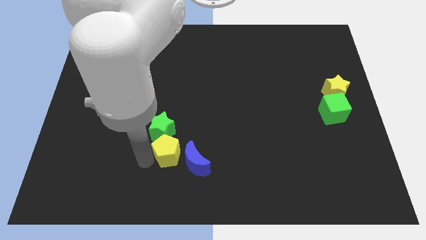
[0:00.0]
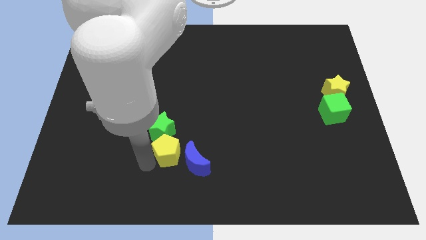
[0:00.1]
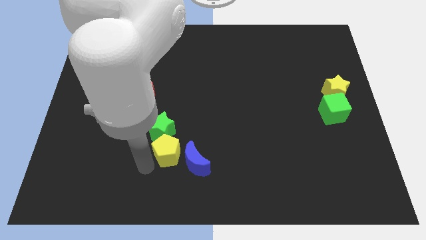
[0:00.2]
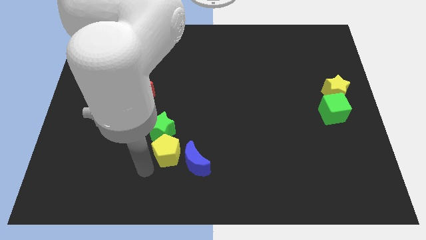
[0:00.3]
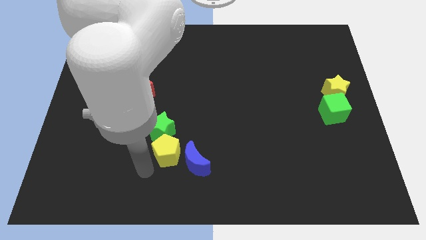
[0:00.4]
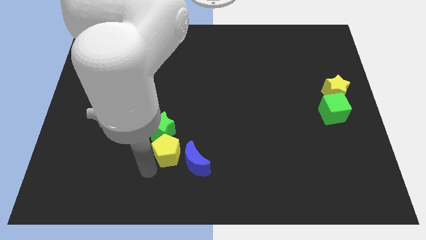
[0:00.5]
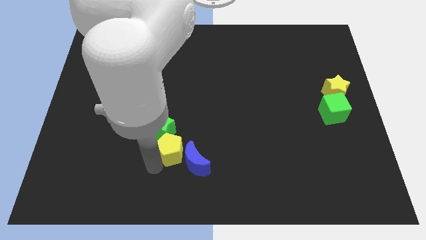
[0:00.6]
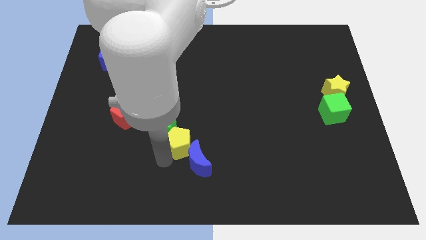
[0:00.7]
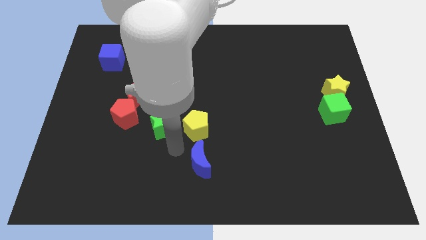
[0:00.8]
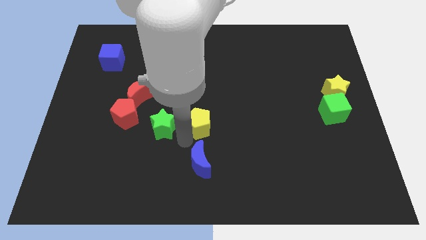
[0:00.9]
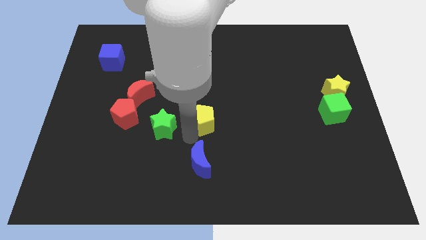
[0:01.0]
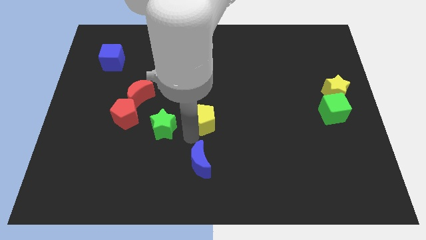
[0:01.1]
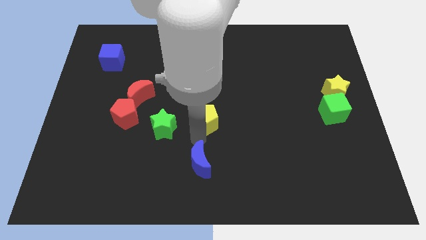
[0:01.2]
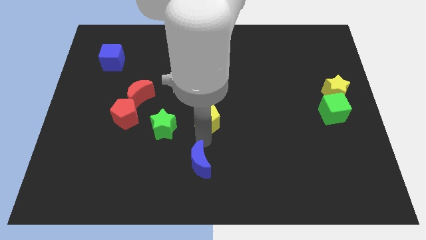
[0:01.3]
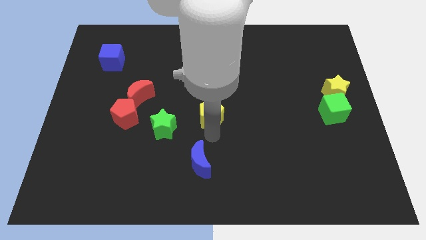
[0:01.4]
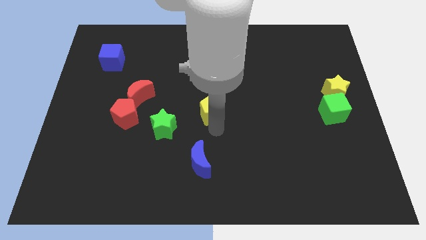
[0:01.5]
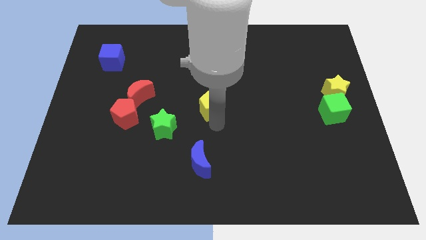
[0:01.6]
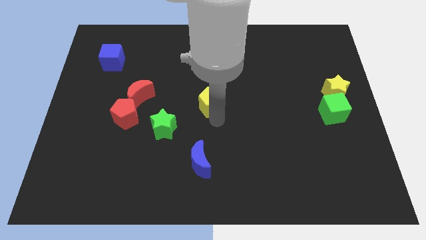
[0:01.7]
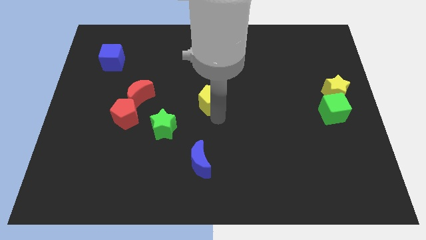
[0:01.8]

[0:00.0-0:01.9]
separate the yellow pentagon from green star

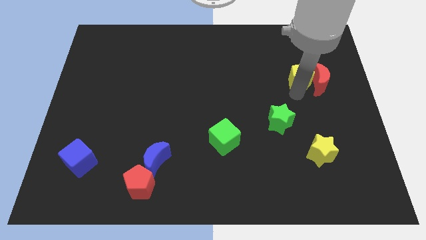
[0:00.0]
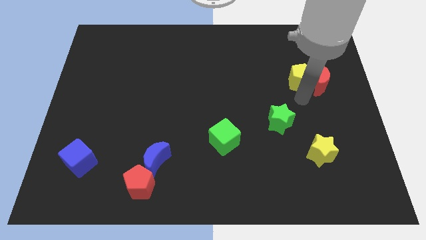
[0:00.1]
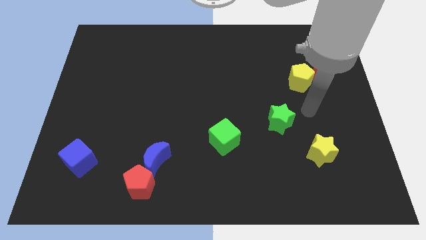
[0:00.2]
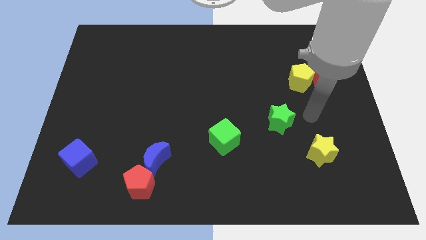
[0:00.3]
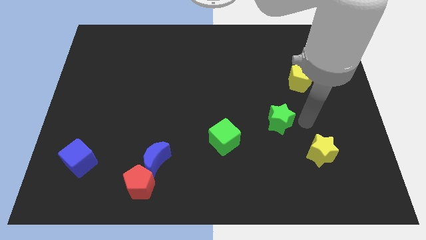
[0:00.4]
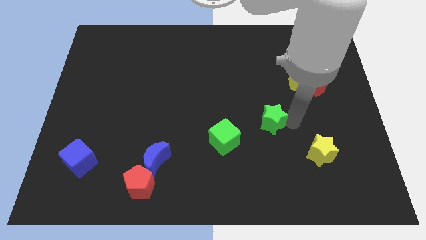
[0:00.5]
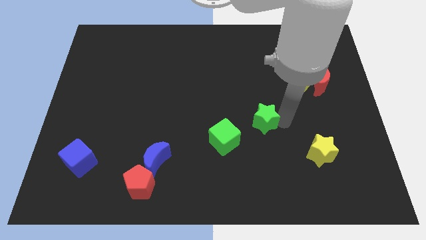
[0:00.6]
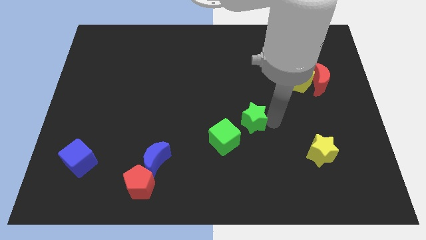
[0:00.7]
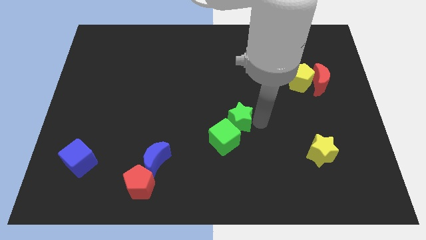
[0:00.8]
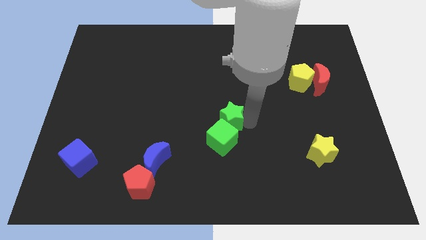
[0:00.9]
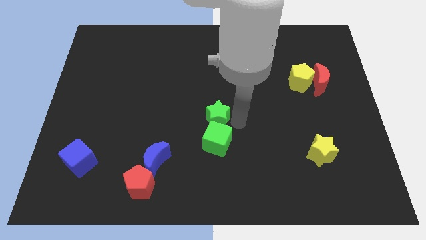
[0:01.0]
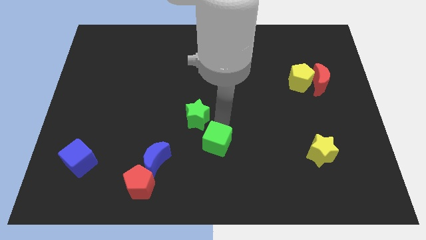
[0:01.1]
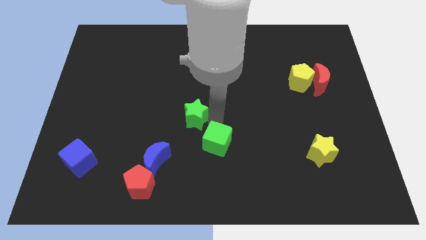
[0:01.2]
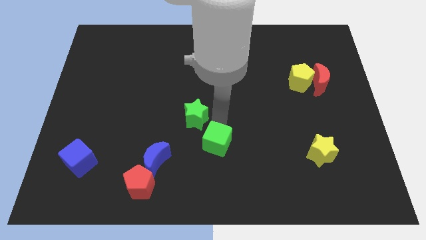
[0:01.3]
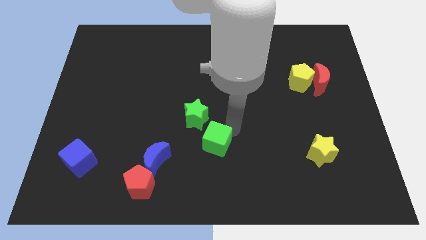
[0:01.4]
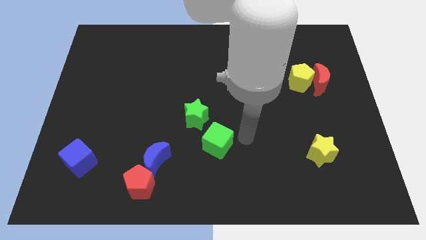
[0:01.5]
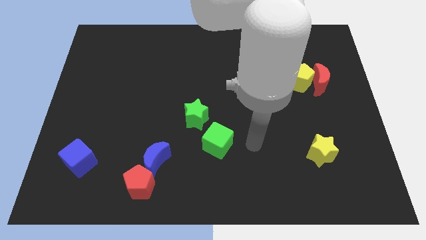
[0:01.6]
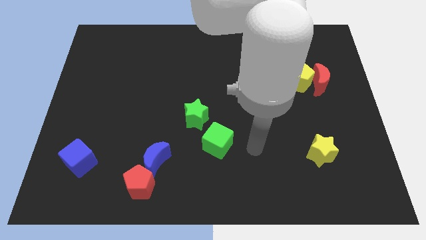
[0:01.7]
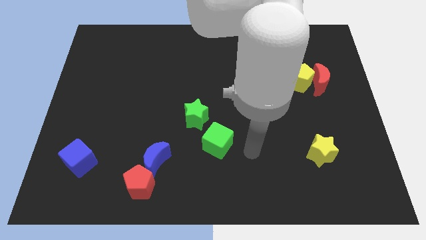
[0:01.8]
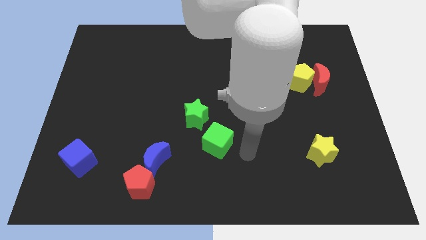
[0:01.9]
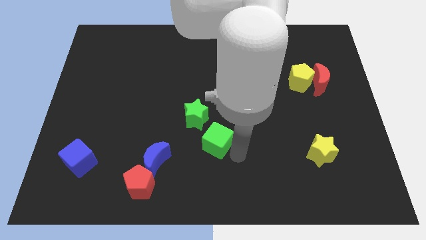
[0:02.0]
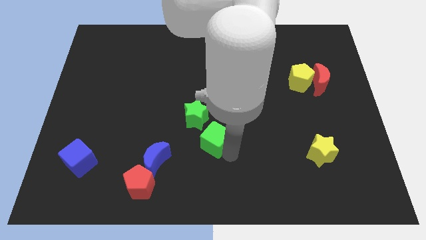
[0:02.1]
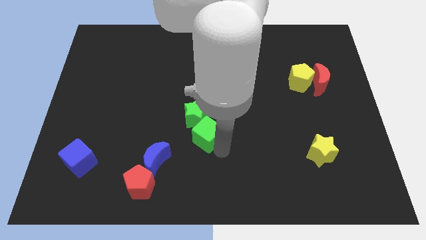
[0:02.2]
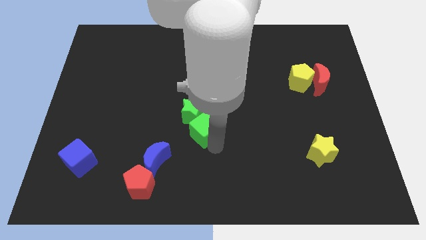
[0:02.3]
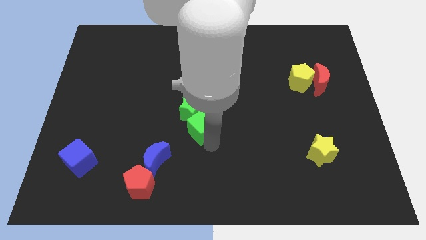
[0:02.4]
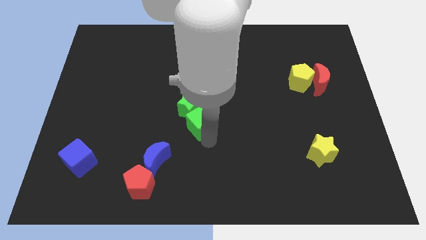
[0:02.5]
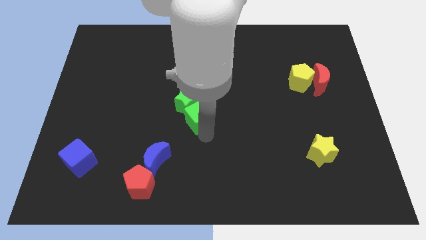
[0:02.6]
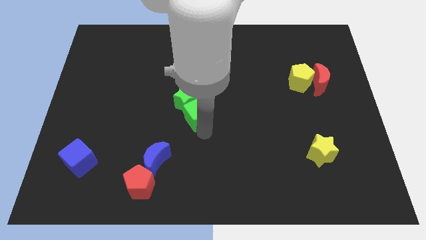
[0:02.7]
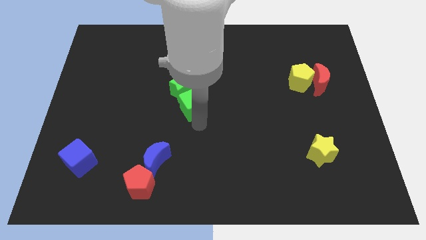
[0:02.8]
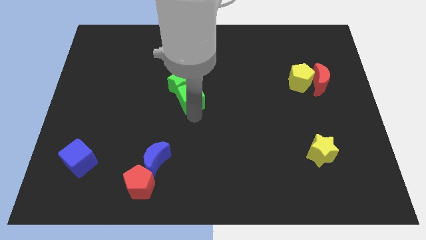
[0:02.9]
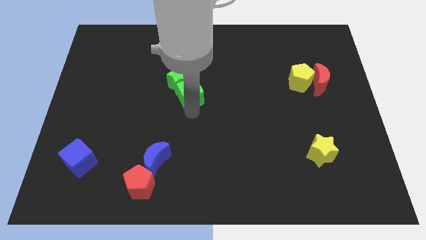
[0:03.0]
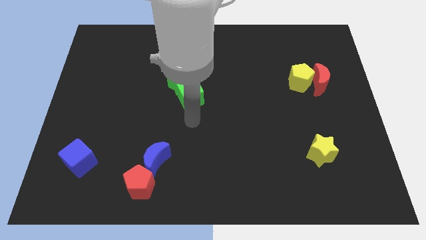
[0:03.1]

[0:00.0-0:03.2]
push the green star with the green cube towards the top of the board

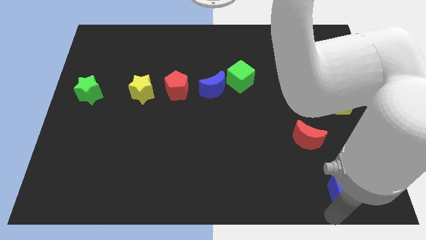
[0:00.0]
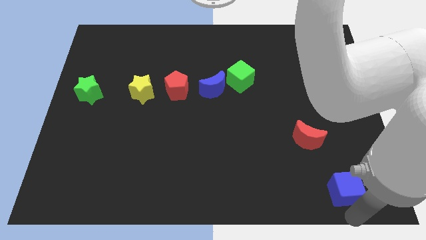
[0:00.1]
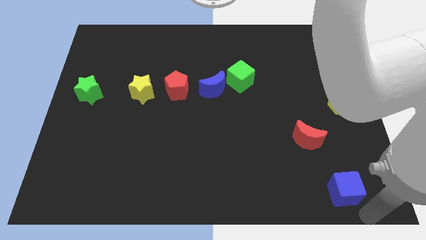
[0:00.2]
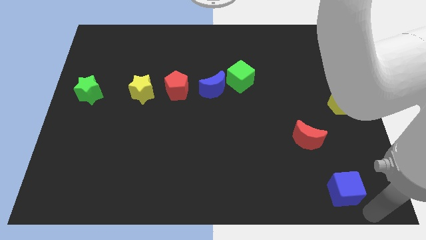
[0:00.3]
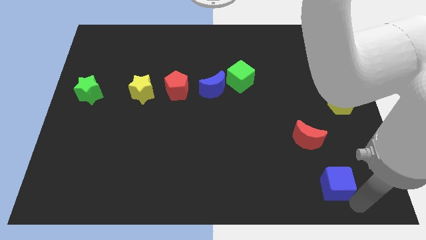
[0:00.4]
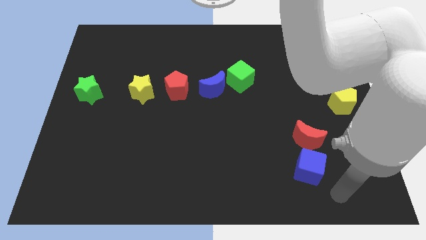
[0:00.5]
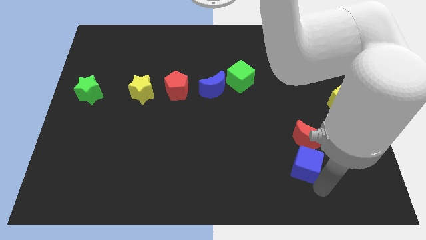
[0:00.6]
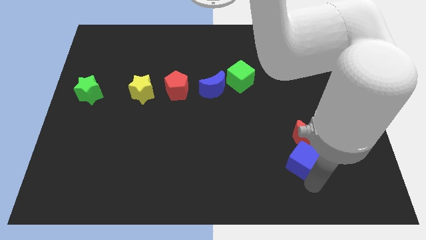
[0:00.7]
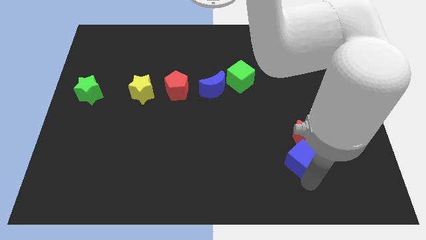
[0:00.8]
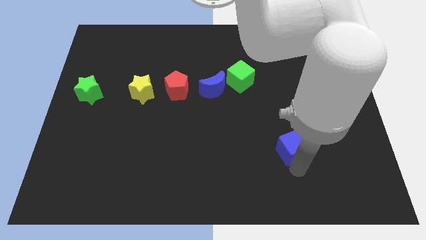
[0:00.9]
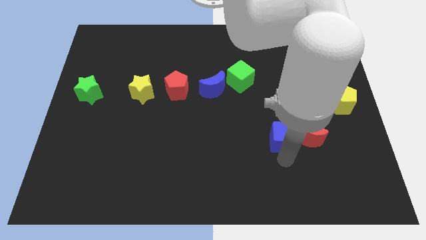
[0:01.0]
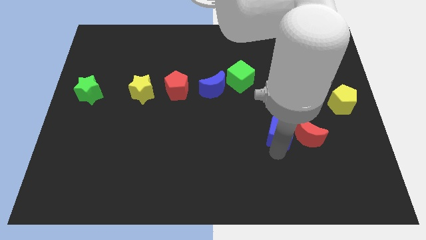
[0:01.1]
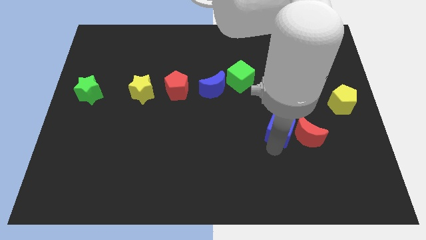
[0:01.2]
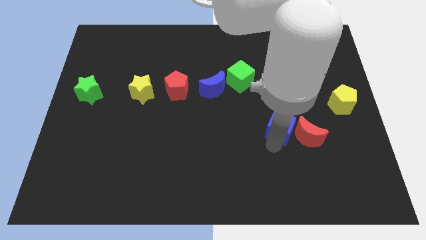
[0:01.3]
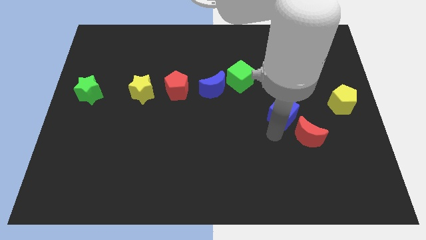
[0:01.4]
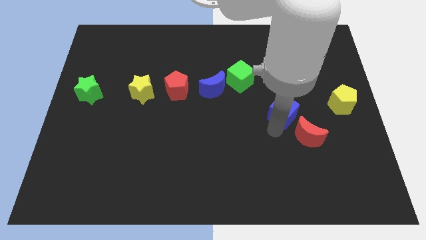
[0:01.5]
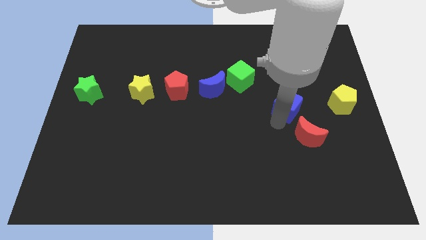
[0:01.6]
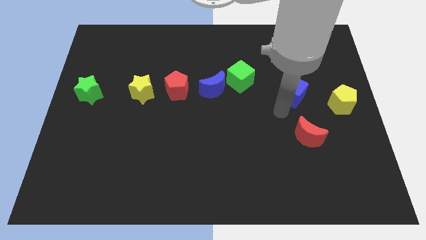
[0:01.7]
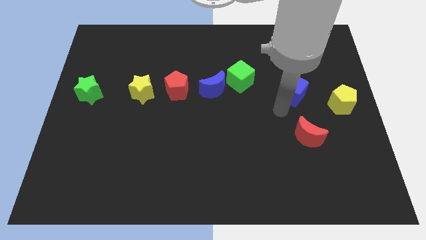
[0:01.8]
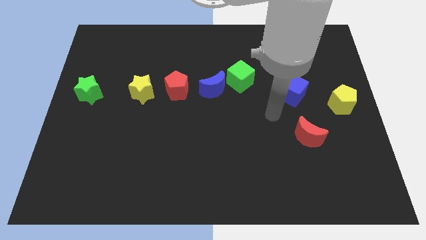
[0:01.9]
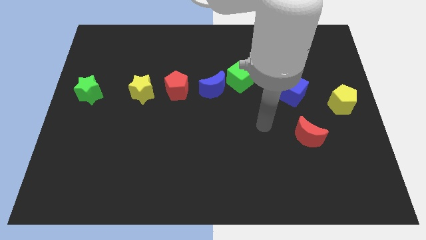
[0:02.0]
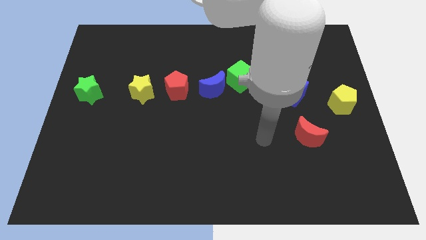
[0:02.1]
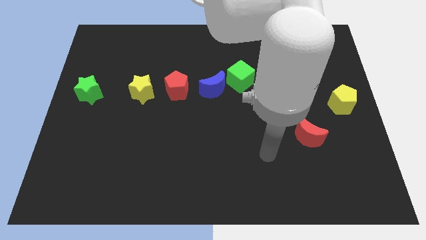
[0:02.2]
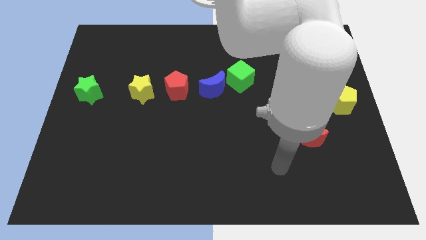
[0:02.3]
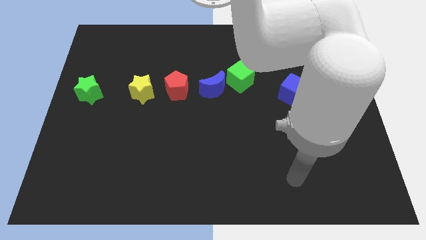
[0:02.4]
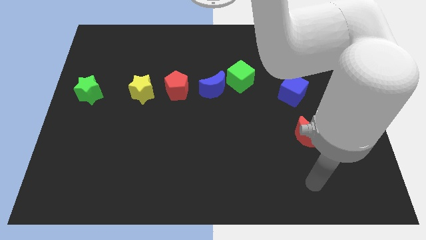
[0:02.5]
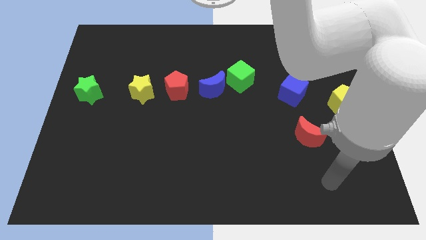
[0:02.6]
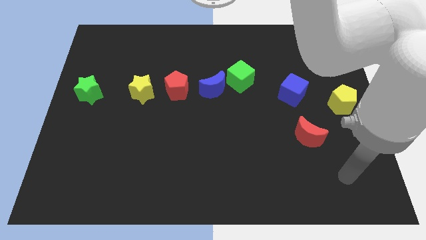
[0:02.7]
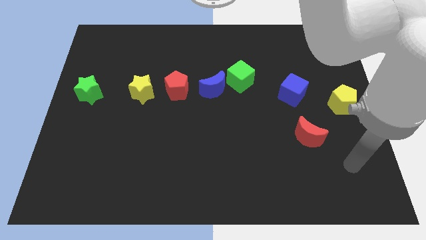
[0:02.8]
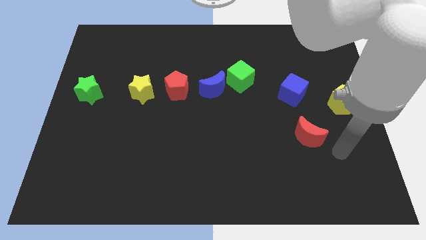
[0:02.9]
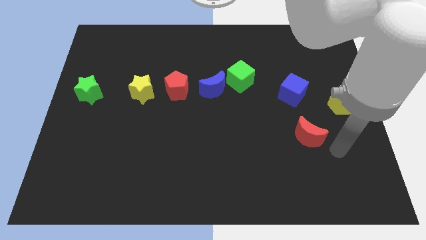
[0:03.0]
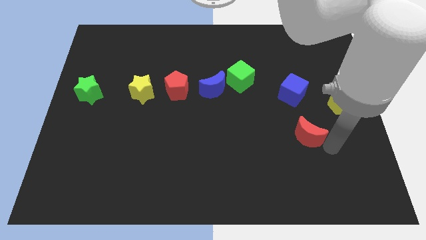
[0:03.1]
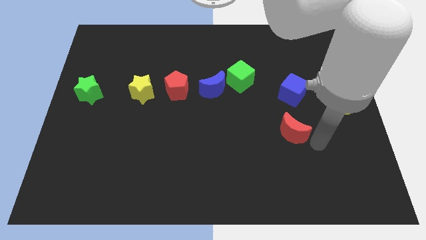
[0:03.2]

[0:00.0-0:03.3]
move the blue cube to the right of the green cube
